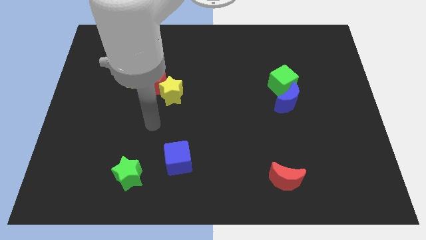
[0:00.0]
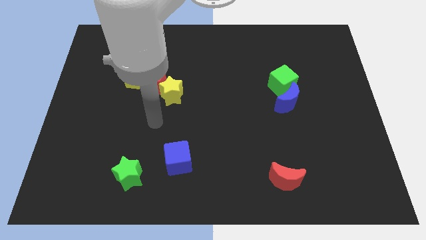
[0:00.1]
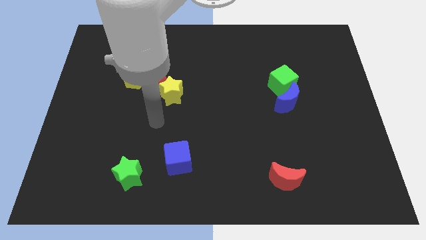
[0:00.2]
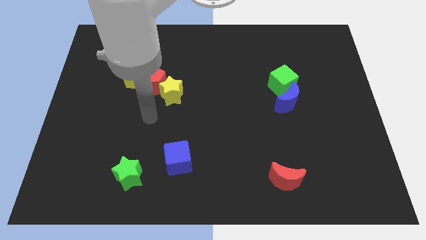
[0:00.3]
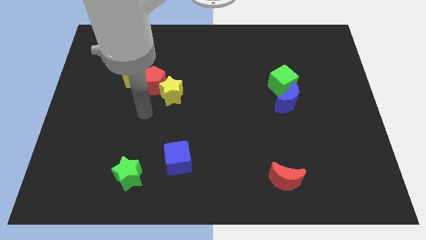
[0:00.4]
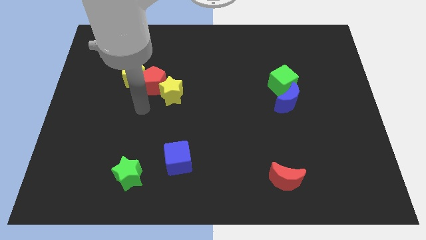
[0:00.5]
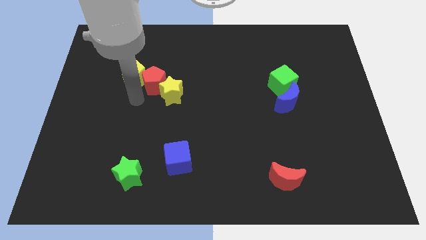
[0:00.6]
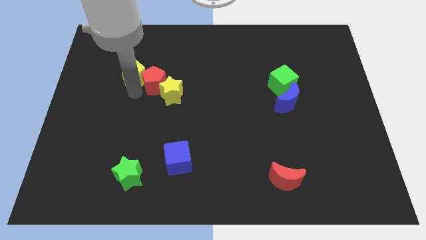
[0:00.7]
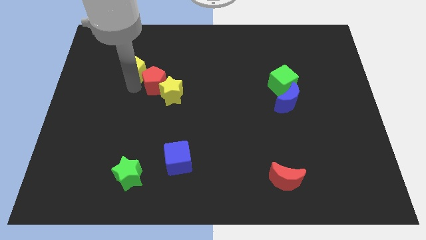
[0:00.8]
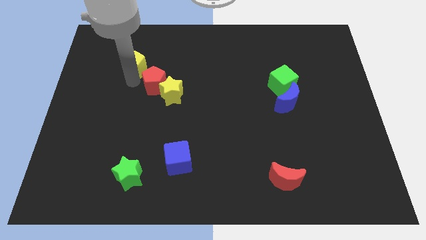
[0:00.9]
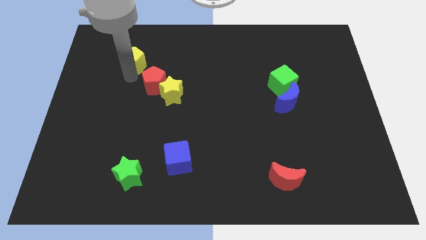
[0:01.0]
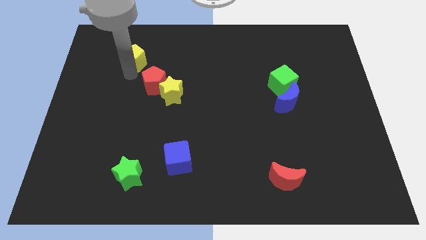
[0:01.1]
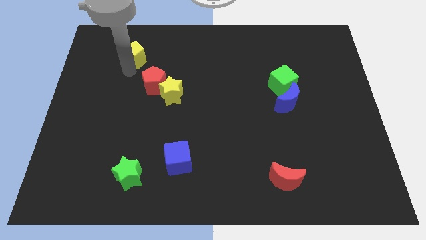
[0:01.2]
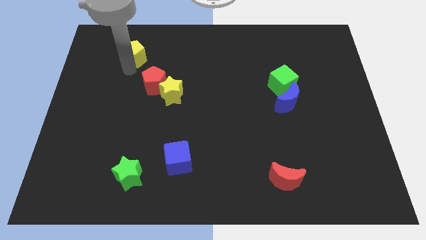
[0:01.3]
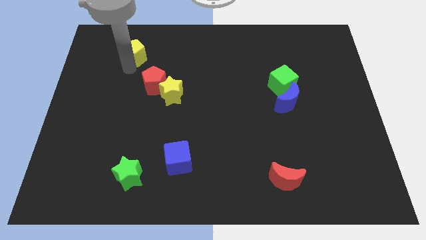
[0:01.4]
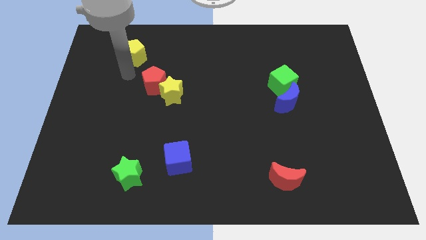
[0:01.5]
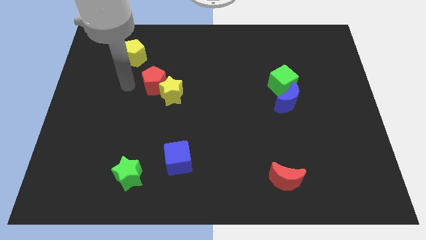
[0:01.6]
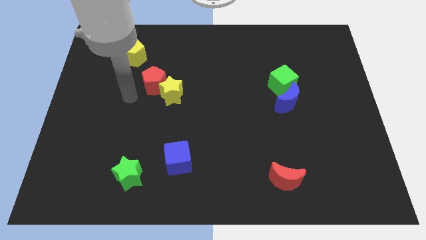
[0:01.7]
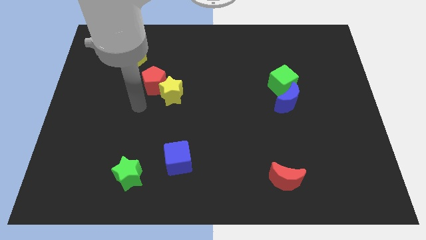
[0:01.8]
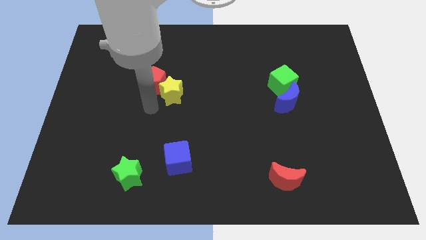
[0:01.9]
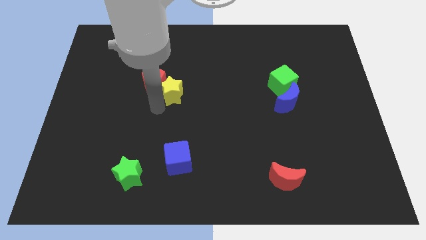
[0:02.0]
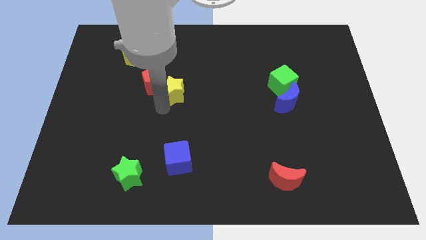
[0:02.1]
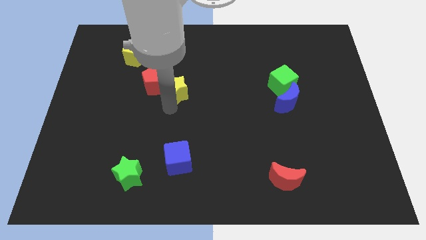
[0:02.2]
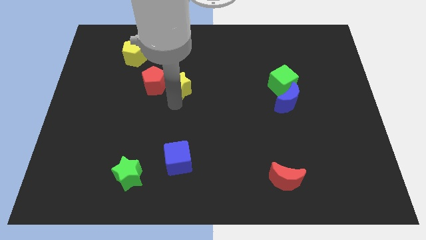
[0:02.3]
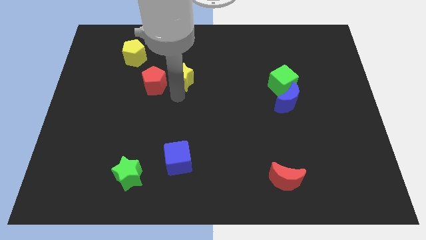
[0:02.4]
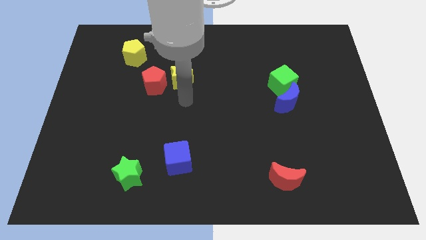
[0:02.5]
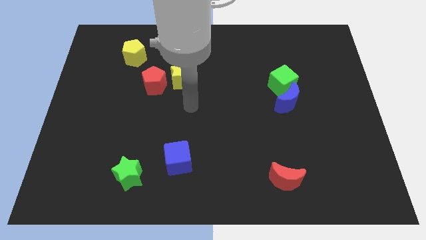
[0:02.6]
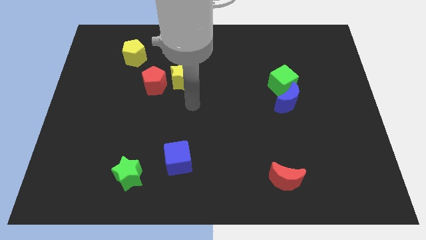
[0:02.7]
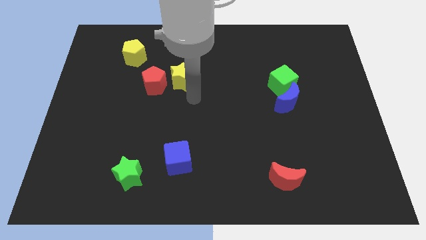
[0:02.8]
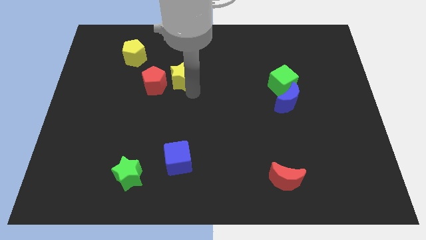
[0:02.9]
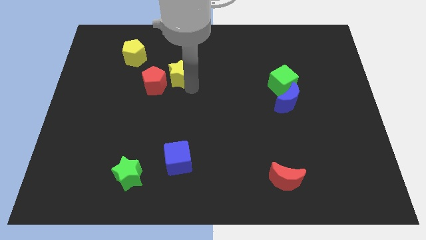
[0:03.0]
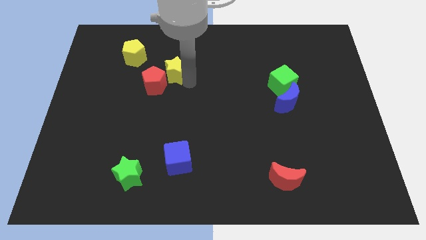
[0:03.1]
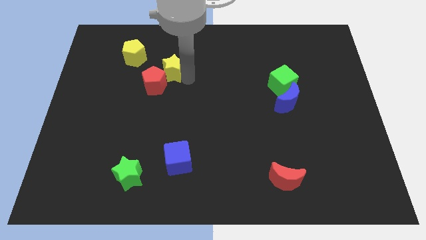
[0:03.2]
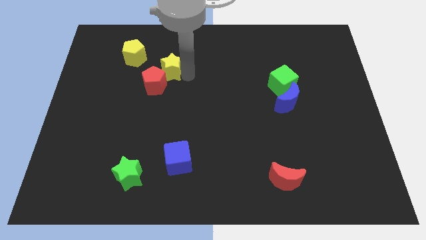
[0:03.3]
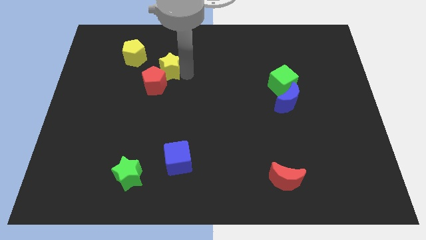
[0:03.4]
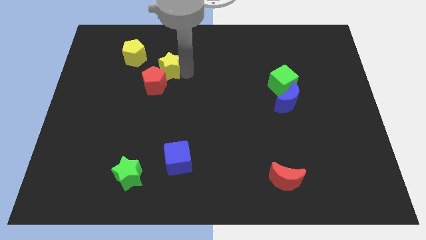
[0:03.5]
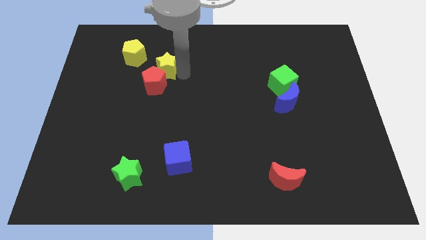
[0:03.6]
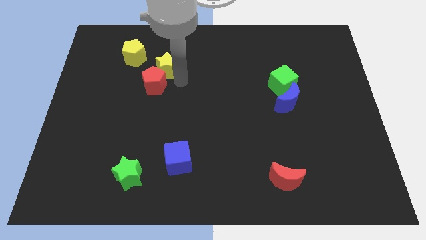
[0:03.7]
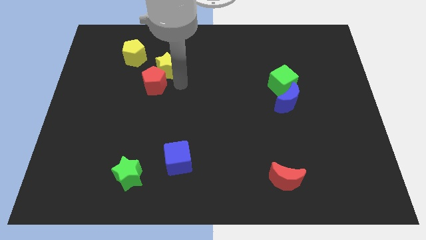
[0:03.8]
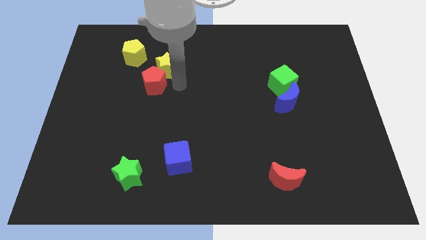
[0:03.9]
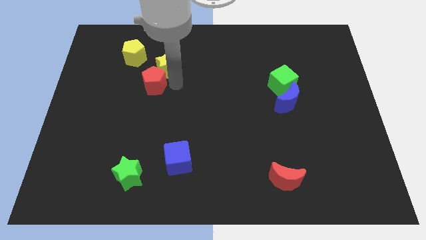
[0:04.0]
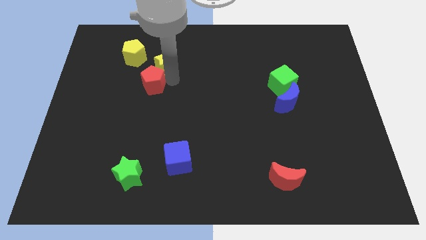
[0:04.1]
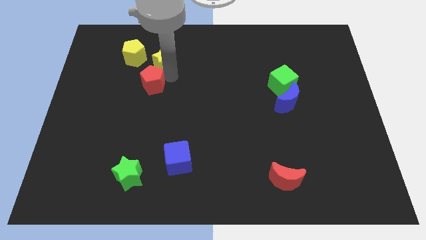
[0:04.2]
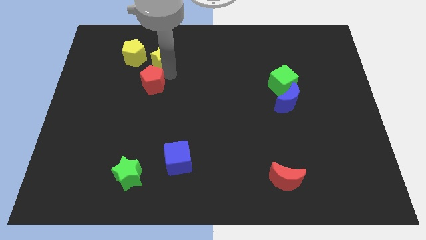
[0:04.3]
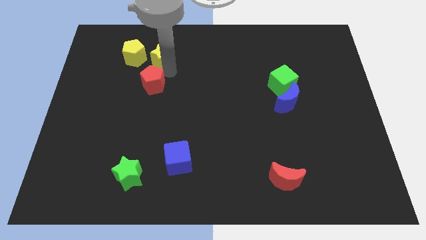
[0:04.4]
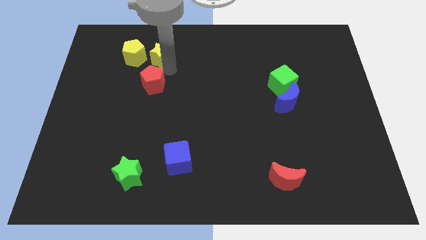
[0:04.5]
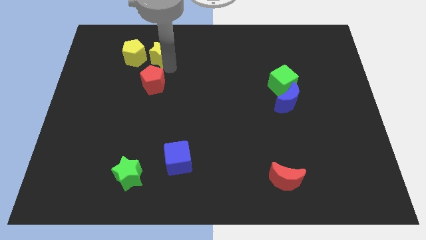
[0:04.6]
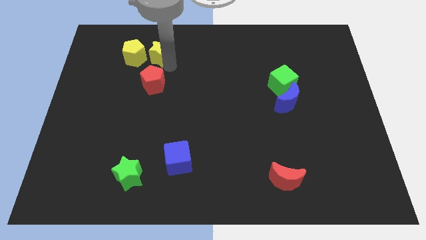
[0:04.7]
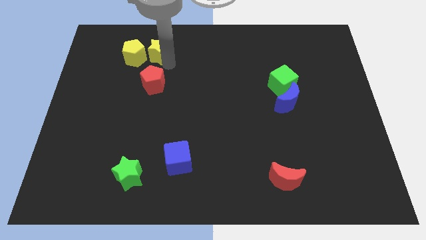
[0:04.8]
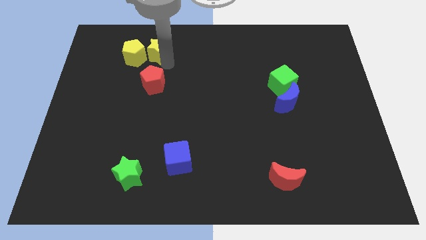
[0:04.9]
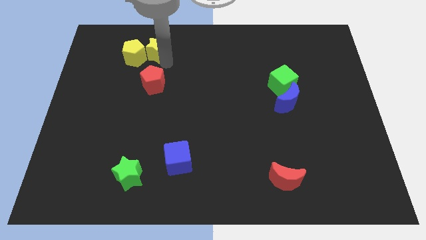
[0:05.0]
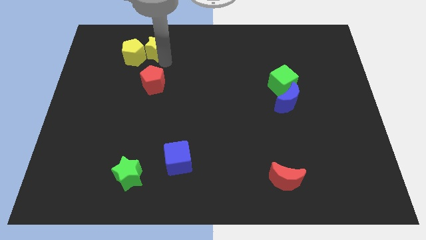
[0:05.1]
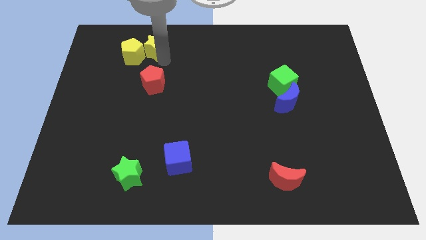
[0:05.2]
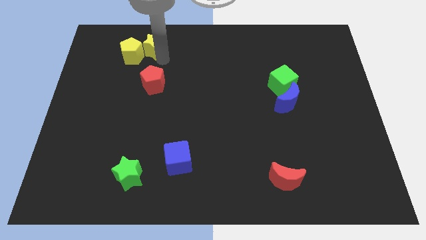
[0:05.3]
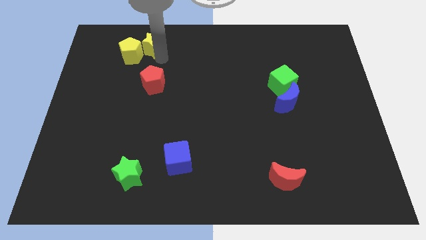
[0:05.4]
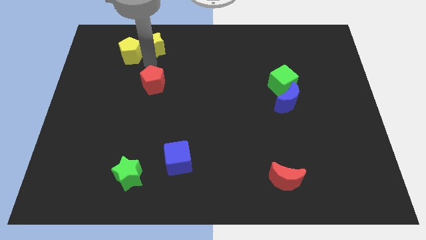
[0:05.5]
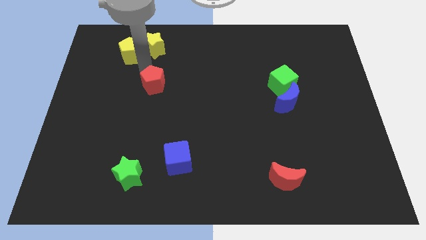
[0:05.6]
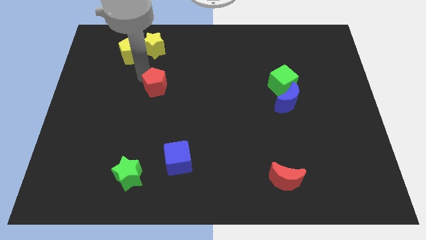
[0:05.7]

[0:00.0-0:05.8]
push the yellow blocks to the top of the board

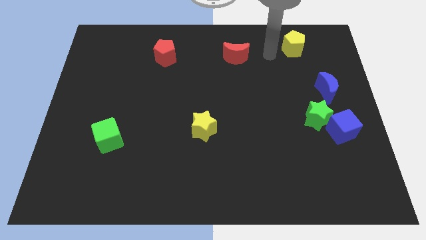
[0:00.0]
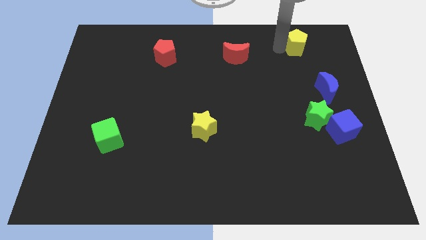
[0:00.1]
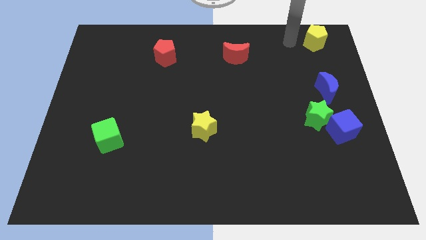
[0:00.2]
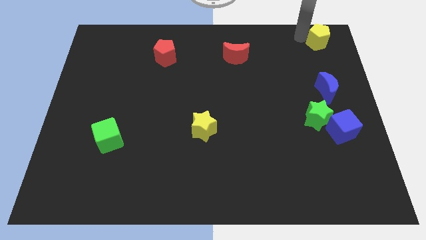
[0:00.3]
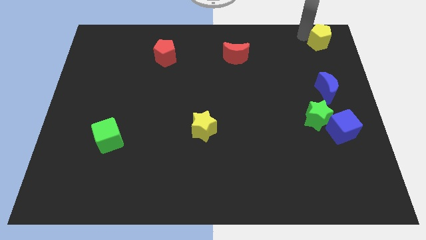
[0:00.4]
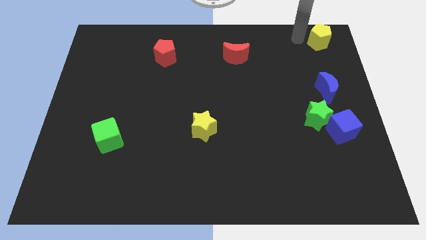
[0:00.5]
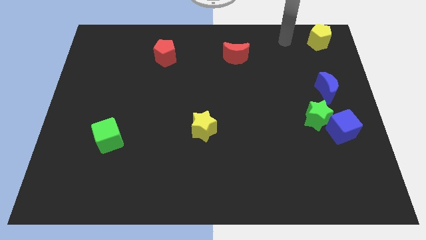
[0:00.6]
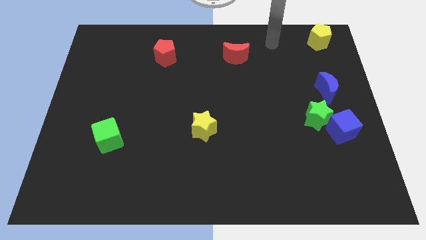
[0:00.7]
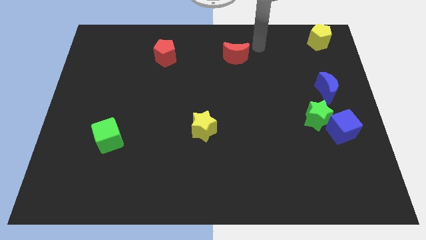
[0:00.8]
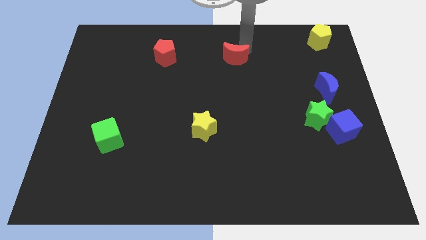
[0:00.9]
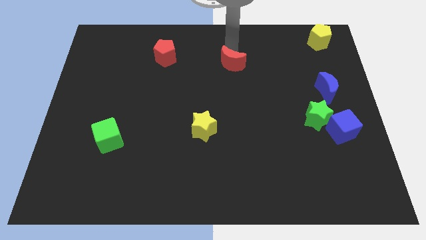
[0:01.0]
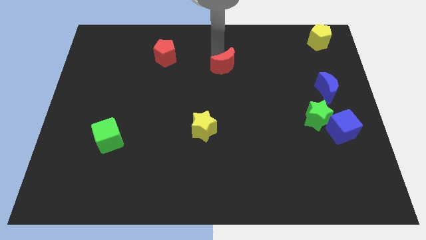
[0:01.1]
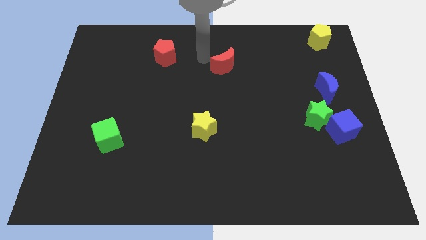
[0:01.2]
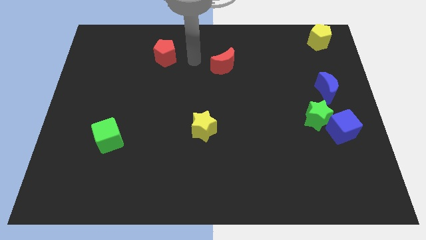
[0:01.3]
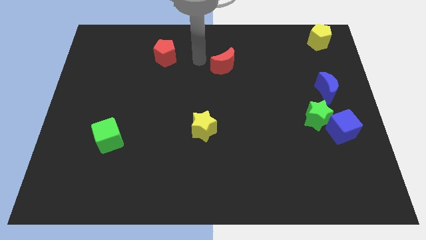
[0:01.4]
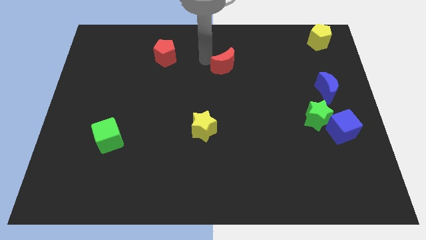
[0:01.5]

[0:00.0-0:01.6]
move the yellow pentagon to top right corner of the board

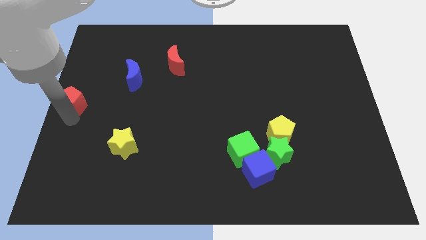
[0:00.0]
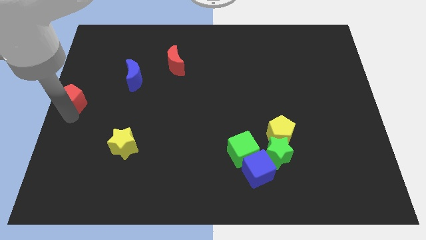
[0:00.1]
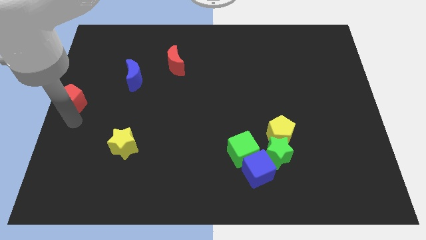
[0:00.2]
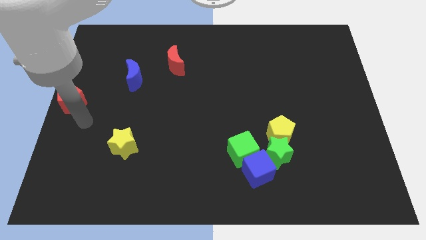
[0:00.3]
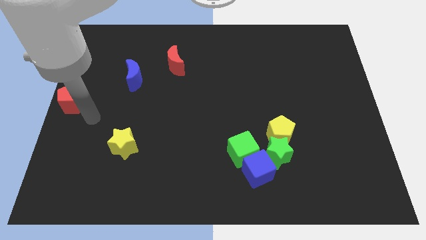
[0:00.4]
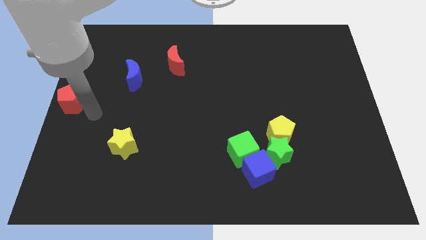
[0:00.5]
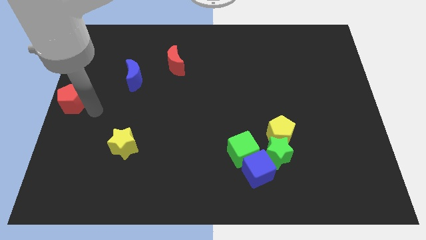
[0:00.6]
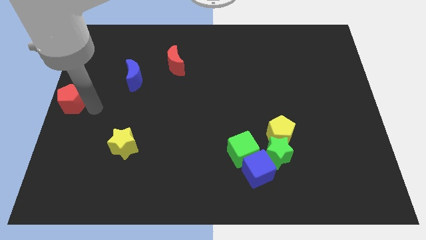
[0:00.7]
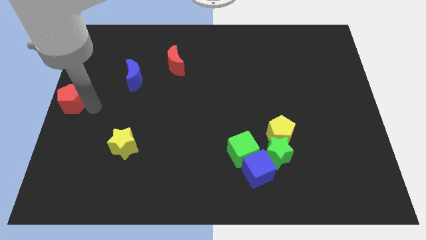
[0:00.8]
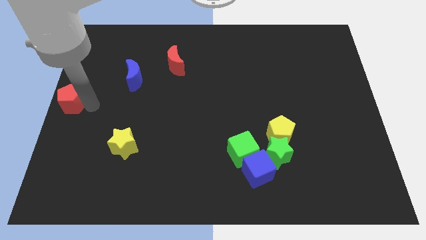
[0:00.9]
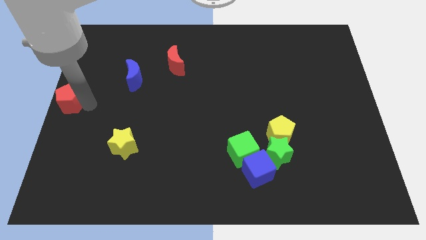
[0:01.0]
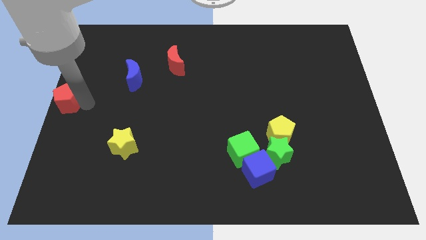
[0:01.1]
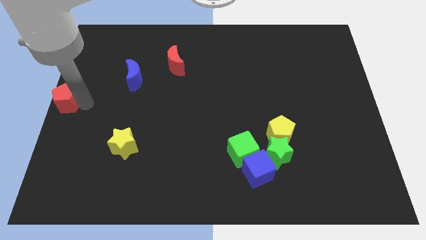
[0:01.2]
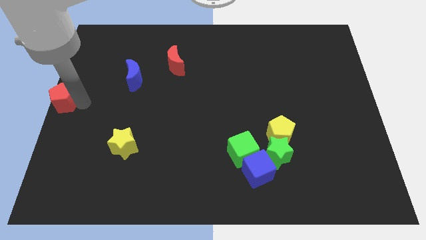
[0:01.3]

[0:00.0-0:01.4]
adjust the red pentagon at left center of the board

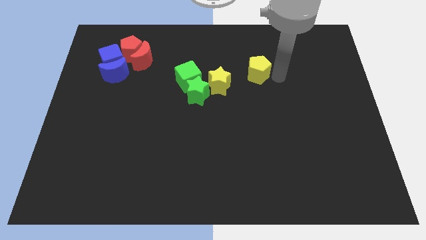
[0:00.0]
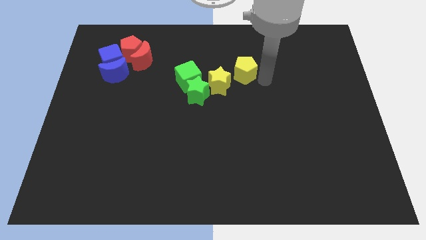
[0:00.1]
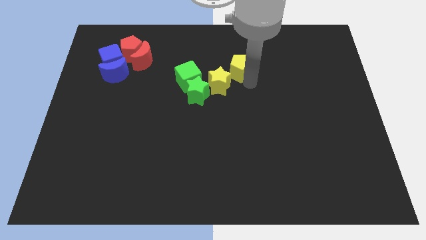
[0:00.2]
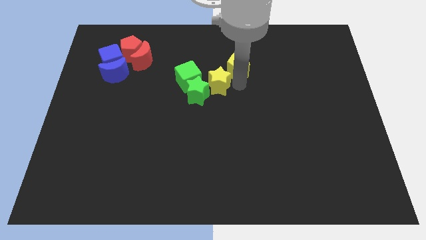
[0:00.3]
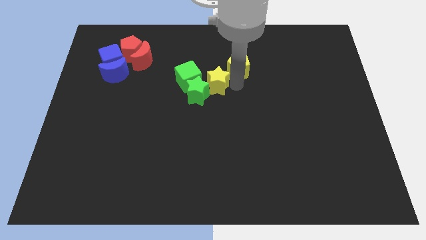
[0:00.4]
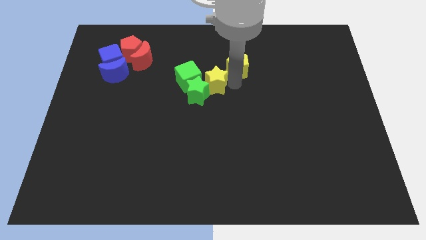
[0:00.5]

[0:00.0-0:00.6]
push the yellow pentagon close to the yellow star
